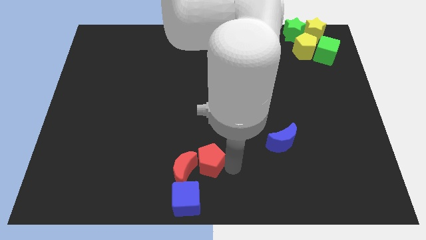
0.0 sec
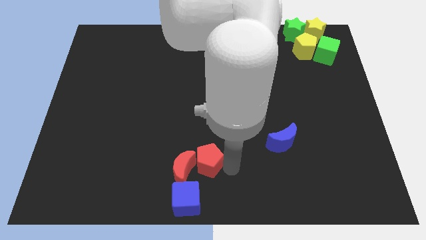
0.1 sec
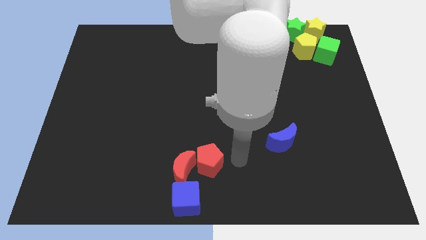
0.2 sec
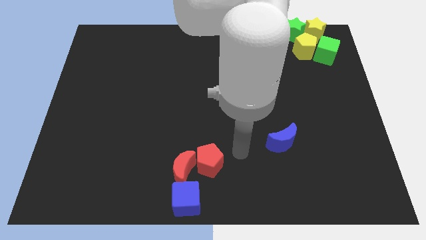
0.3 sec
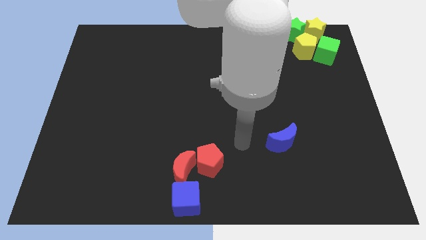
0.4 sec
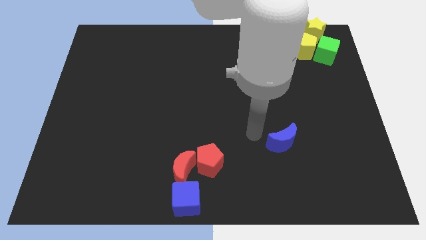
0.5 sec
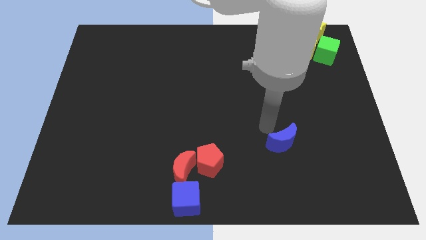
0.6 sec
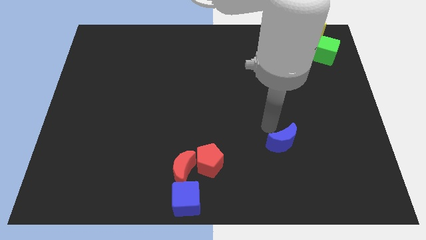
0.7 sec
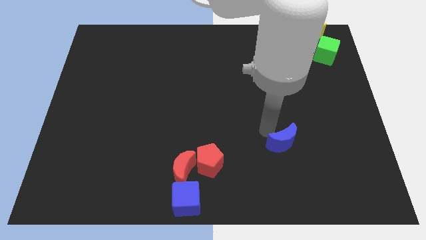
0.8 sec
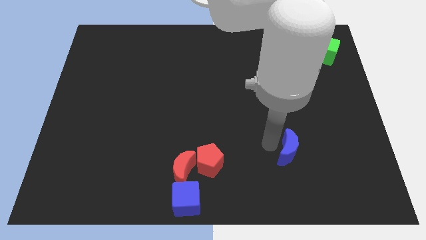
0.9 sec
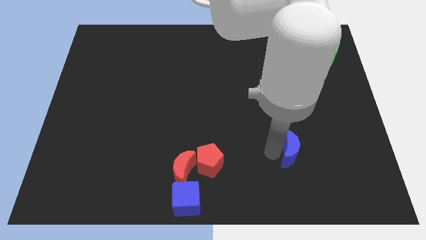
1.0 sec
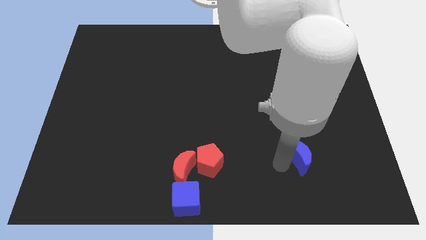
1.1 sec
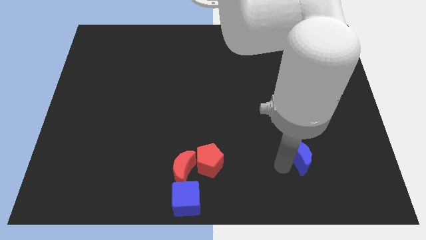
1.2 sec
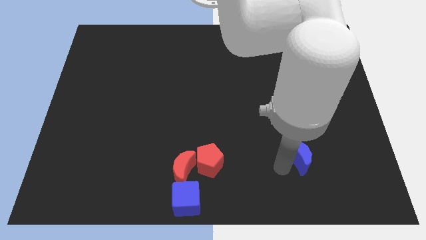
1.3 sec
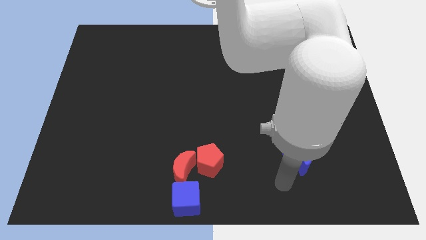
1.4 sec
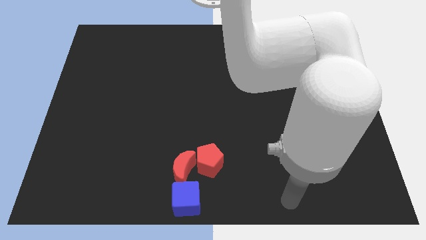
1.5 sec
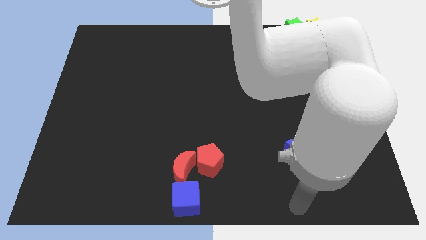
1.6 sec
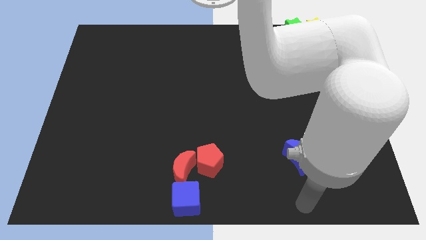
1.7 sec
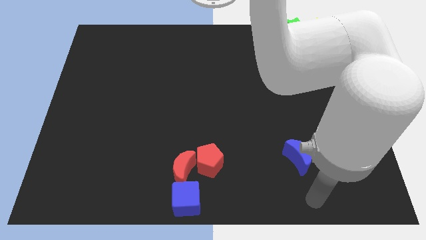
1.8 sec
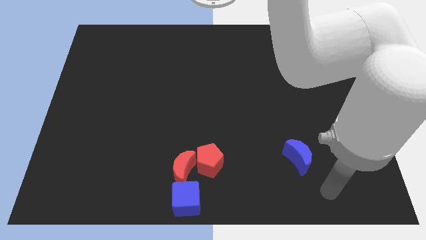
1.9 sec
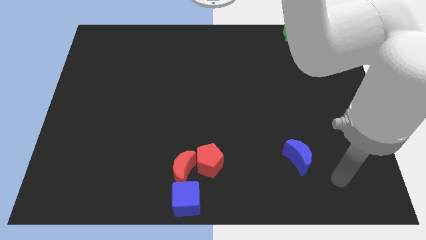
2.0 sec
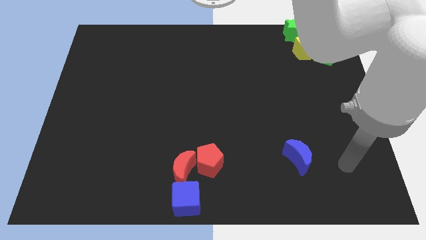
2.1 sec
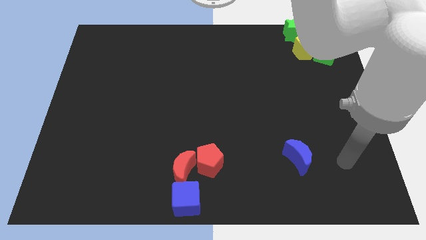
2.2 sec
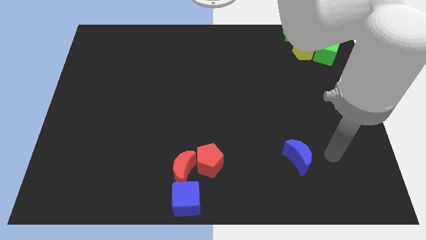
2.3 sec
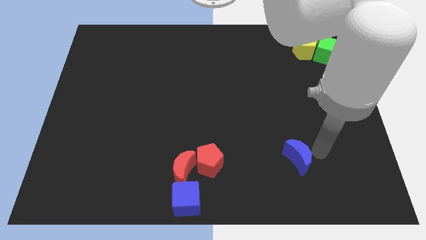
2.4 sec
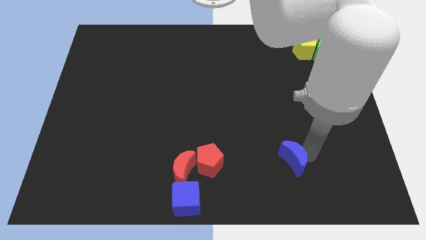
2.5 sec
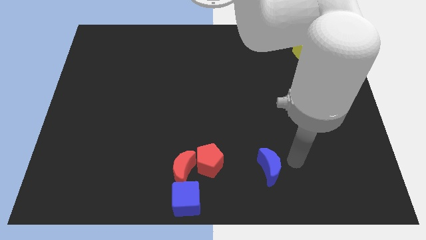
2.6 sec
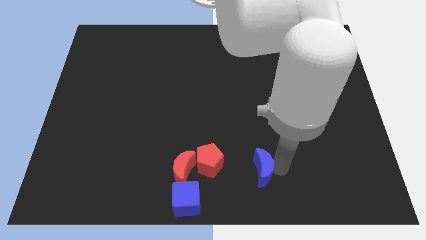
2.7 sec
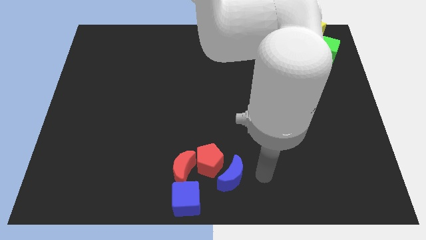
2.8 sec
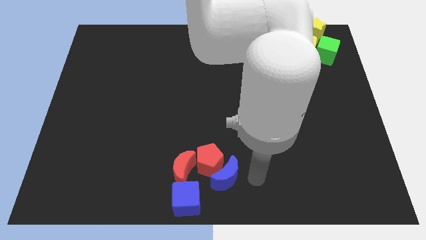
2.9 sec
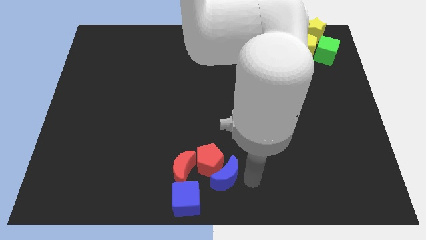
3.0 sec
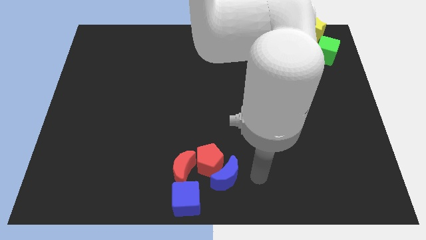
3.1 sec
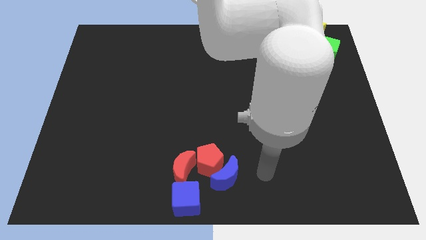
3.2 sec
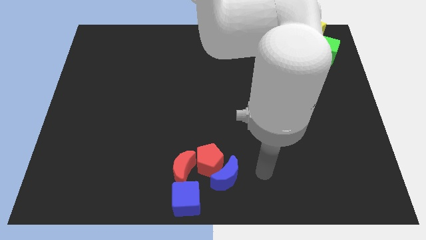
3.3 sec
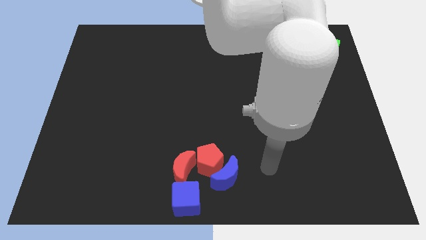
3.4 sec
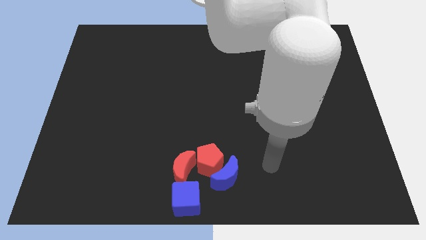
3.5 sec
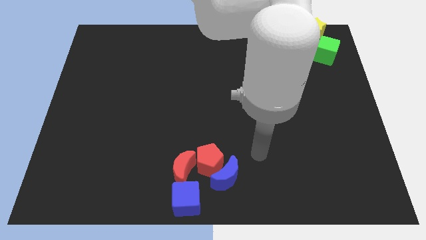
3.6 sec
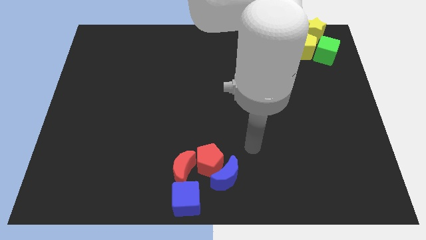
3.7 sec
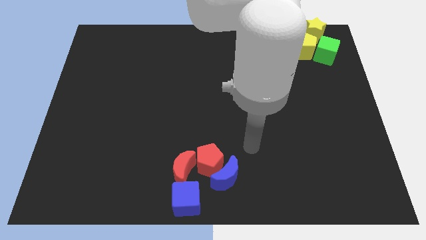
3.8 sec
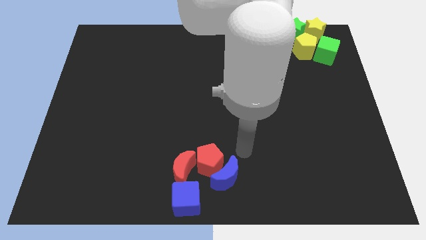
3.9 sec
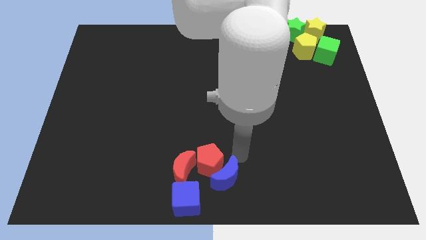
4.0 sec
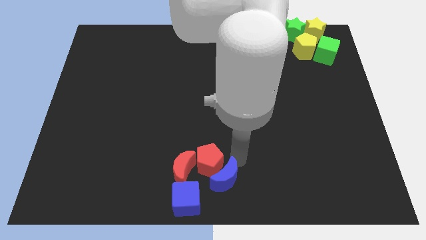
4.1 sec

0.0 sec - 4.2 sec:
place blue crescent near to red pentagon

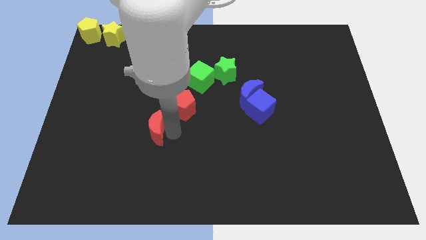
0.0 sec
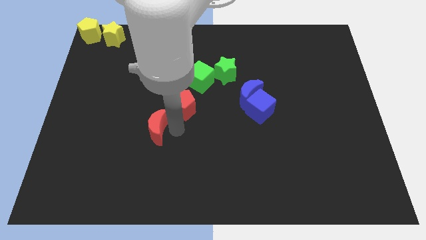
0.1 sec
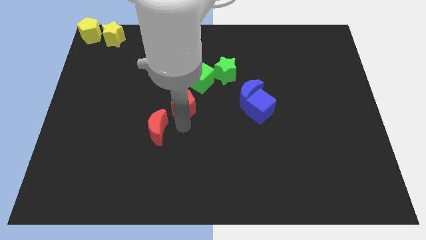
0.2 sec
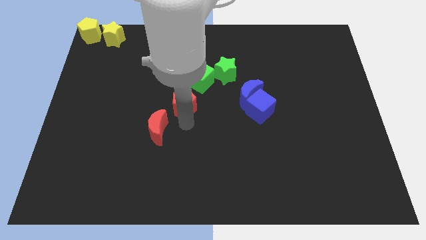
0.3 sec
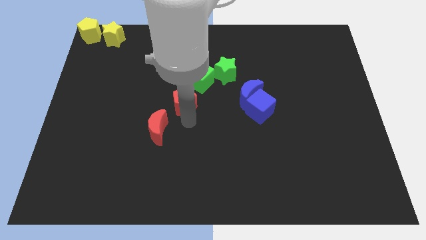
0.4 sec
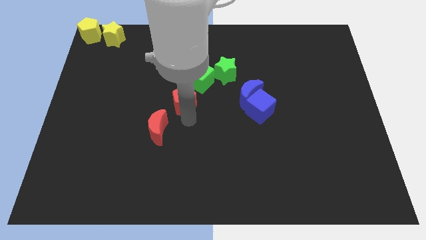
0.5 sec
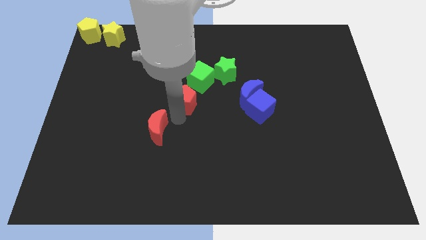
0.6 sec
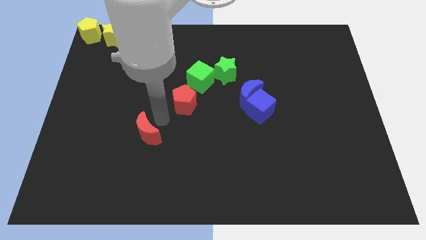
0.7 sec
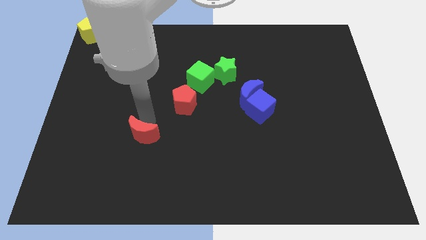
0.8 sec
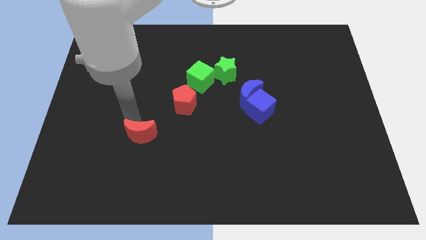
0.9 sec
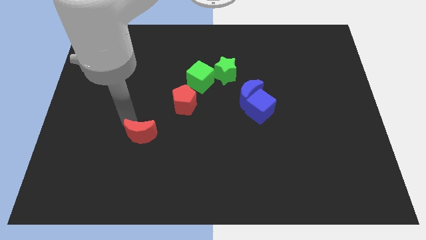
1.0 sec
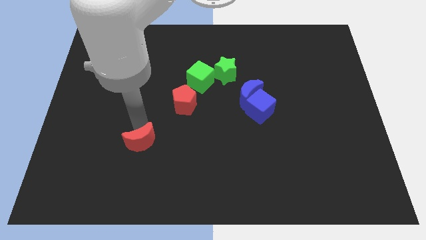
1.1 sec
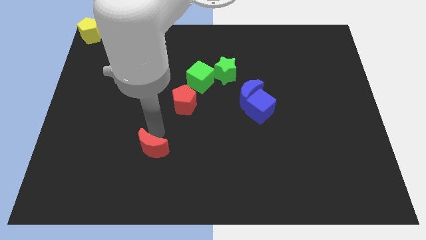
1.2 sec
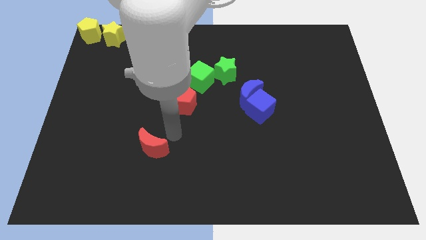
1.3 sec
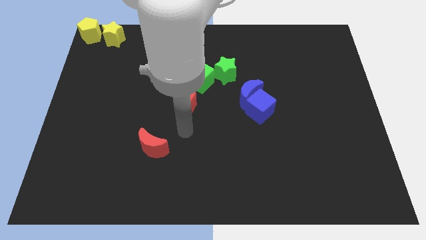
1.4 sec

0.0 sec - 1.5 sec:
separate the red blocks

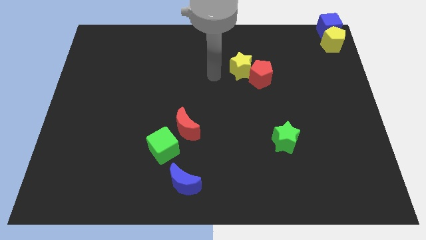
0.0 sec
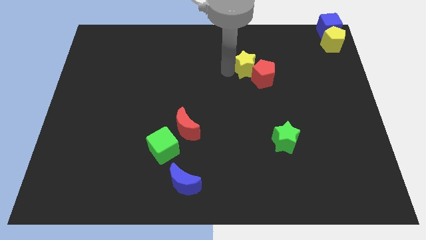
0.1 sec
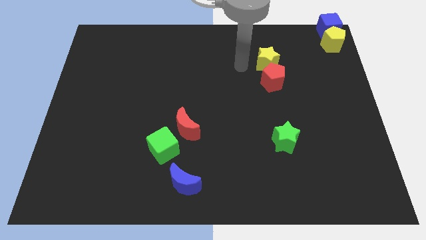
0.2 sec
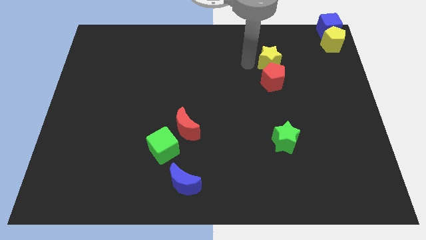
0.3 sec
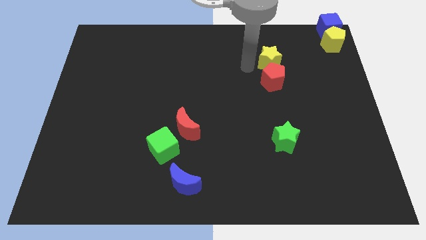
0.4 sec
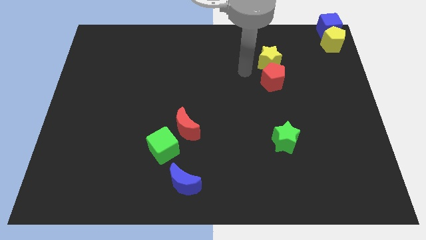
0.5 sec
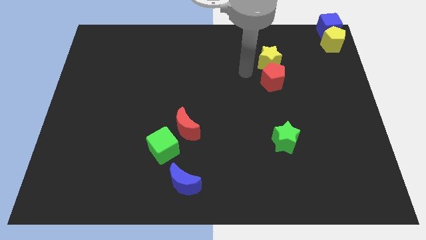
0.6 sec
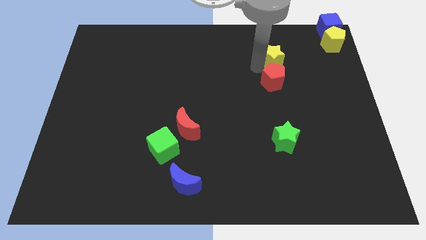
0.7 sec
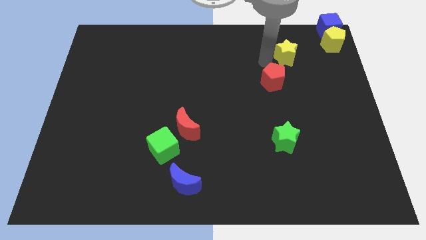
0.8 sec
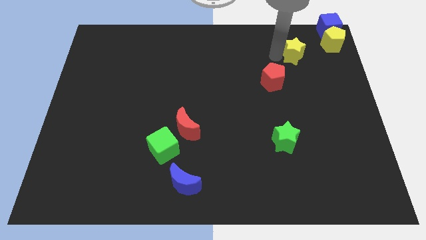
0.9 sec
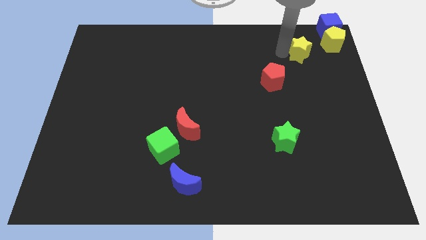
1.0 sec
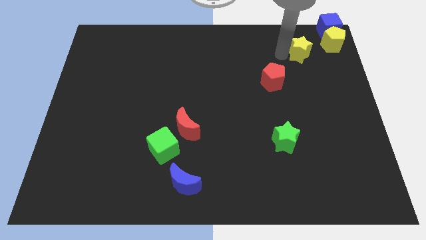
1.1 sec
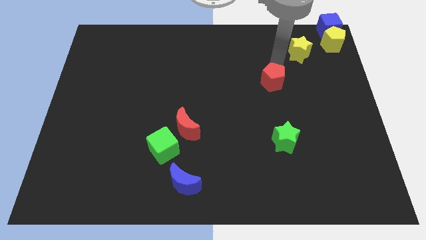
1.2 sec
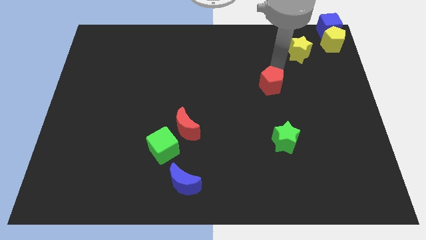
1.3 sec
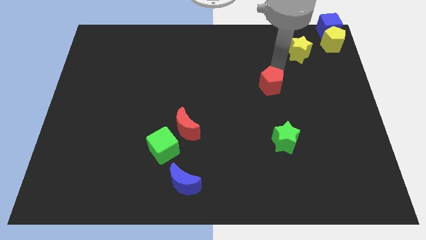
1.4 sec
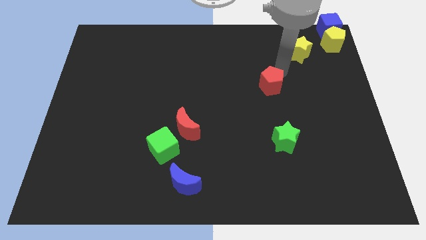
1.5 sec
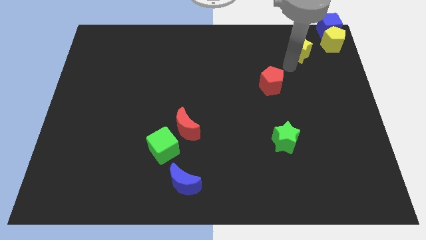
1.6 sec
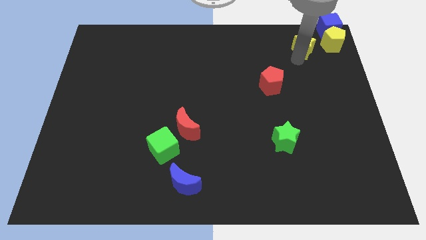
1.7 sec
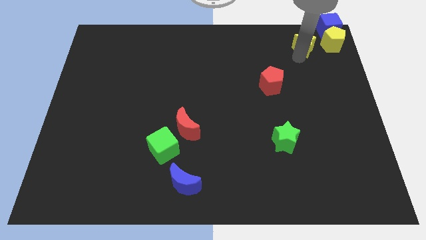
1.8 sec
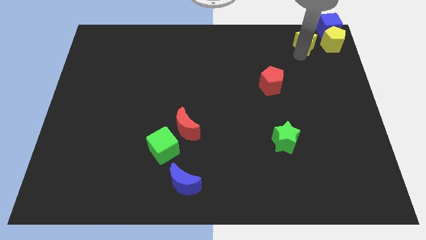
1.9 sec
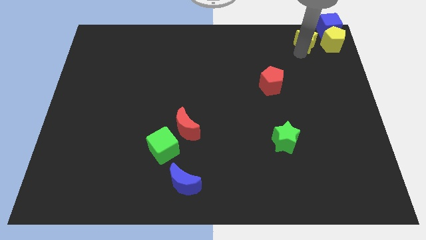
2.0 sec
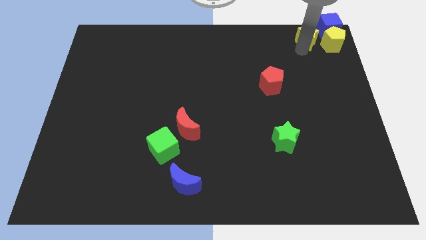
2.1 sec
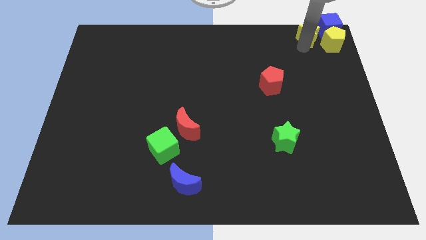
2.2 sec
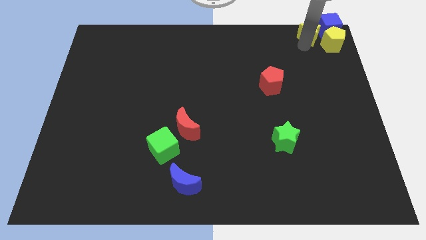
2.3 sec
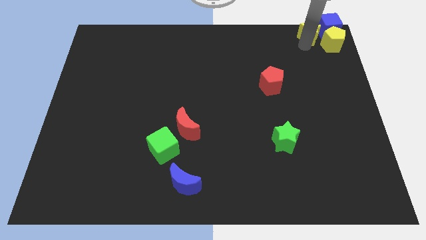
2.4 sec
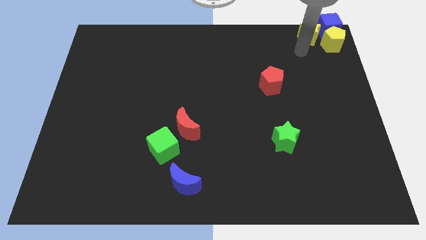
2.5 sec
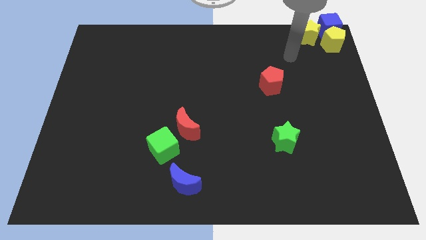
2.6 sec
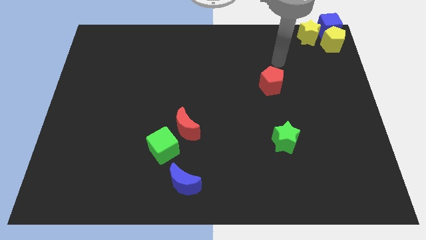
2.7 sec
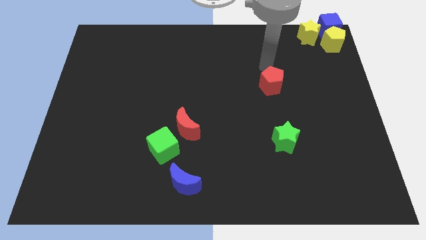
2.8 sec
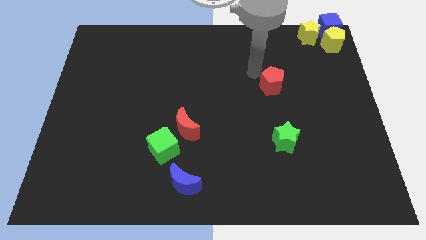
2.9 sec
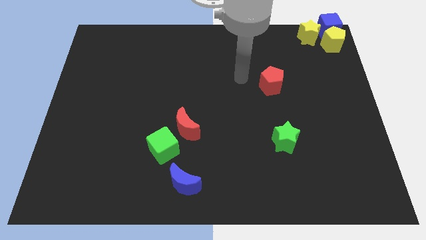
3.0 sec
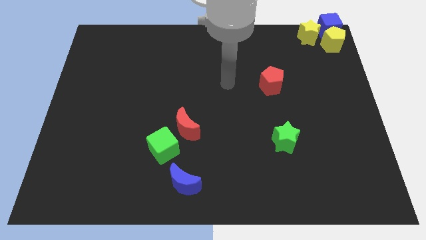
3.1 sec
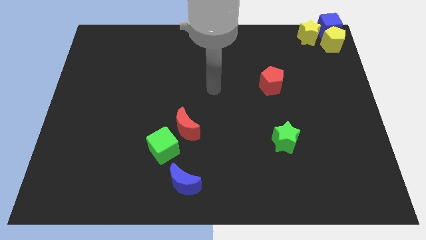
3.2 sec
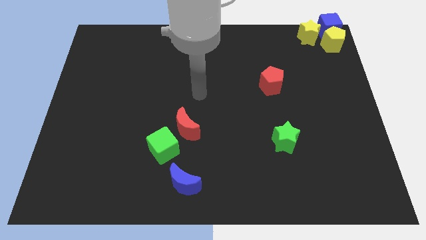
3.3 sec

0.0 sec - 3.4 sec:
slide the yellow star to the left of the blue cube
